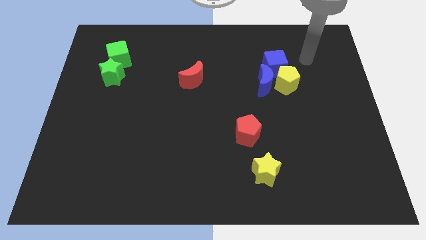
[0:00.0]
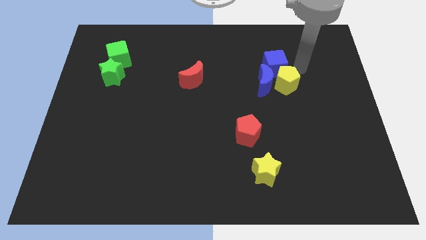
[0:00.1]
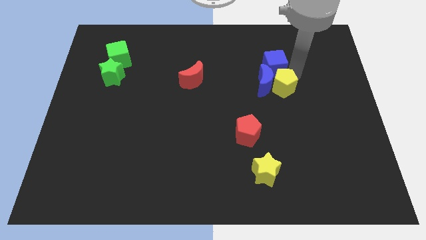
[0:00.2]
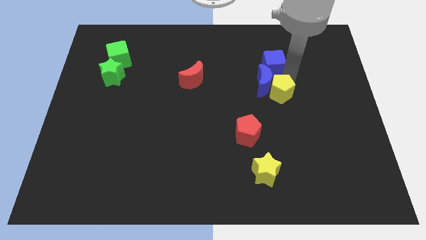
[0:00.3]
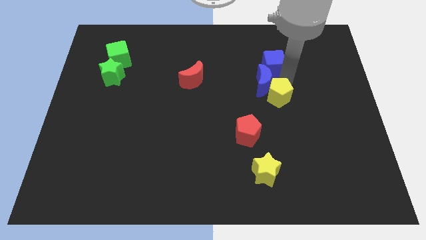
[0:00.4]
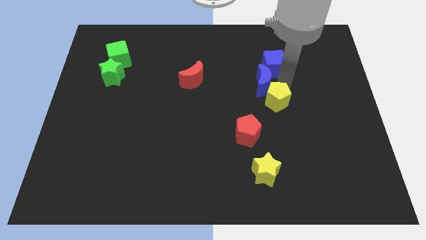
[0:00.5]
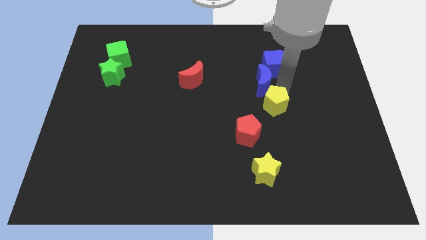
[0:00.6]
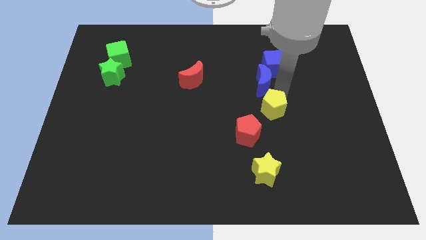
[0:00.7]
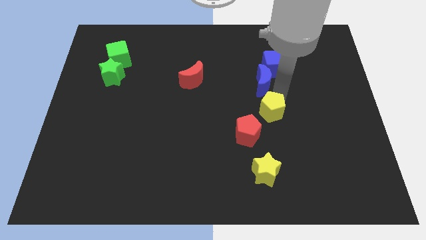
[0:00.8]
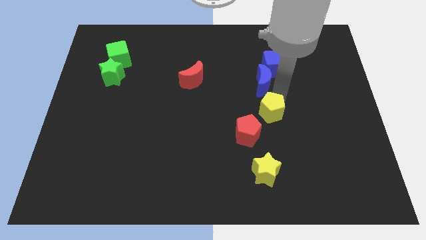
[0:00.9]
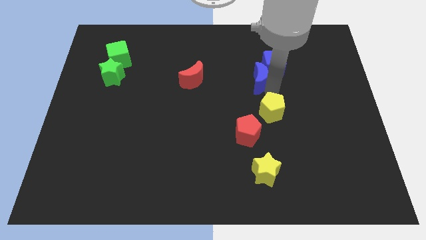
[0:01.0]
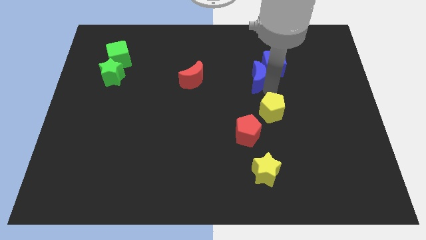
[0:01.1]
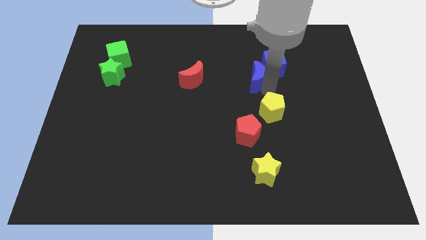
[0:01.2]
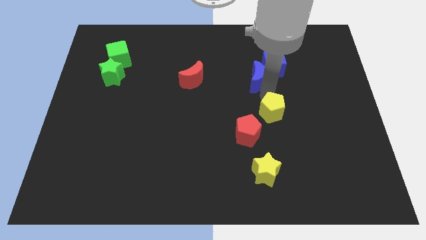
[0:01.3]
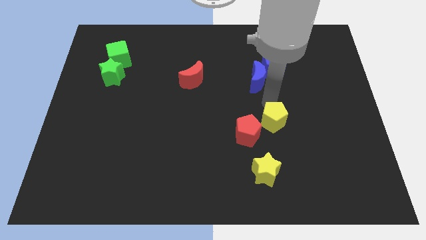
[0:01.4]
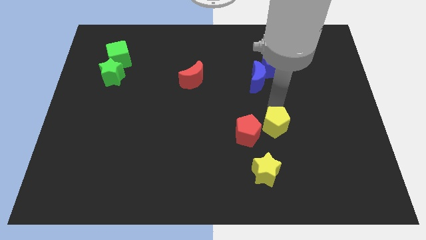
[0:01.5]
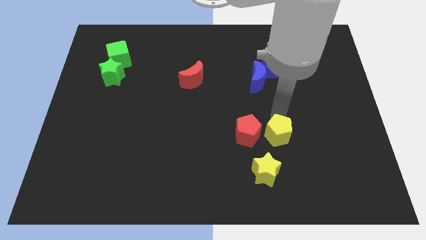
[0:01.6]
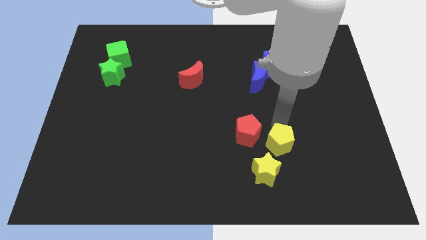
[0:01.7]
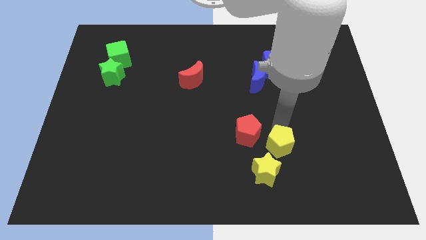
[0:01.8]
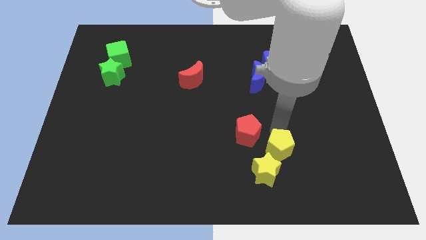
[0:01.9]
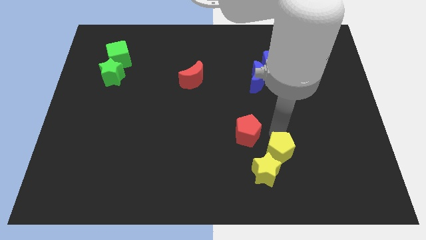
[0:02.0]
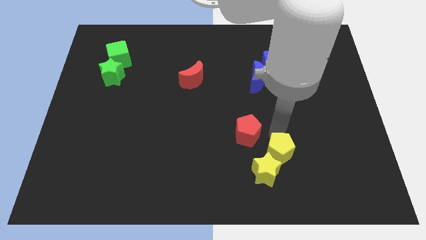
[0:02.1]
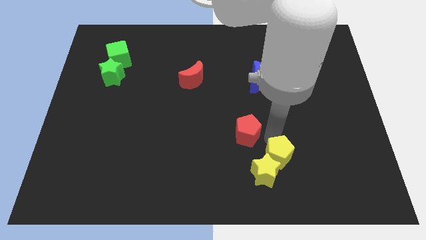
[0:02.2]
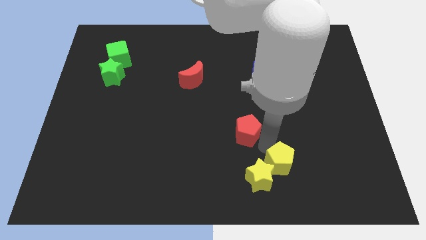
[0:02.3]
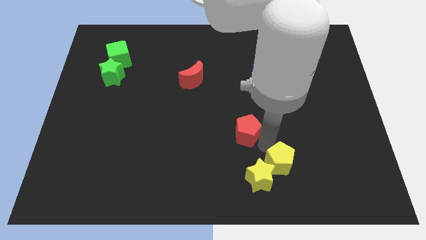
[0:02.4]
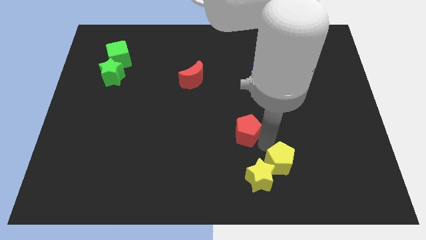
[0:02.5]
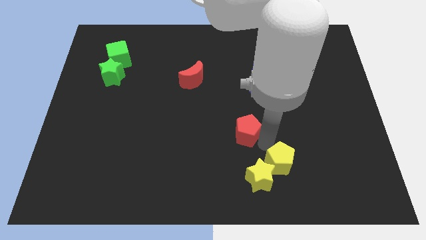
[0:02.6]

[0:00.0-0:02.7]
push the yellow pentagon into the yellow star

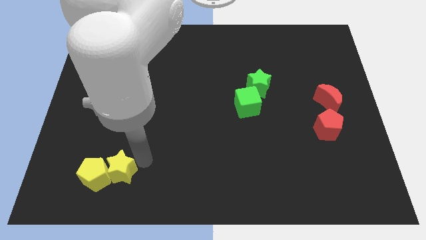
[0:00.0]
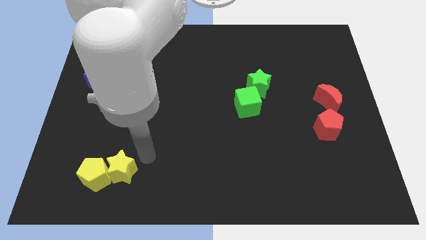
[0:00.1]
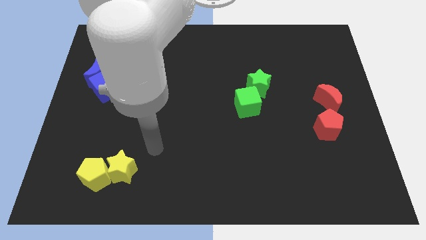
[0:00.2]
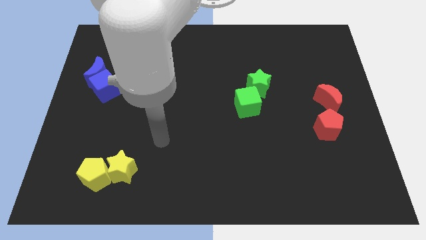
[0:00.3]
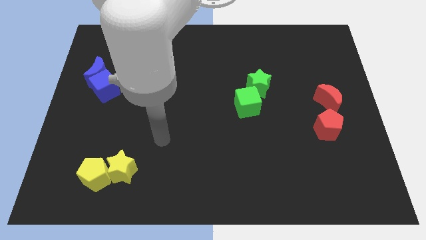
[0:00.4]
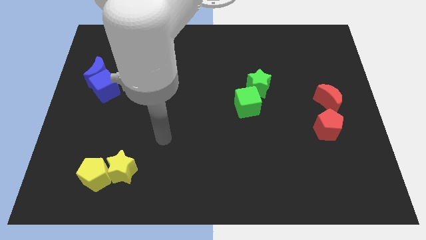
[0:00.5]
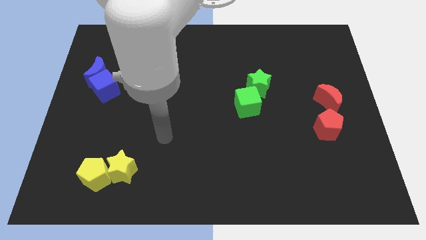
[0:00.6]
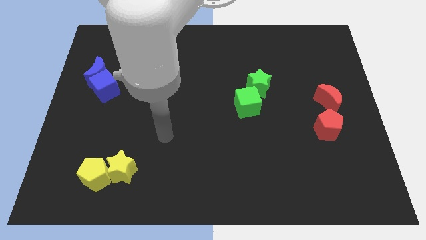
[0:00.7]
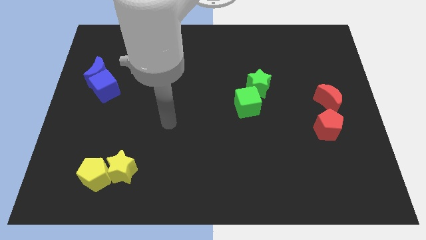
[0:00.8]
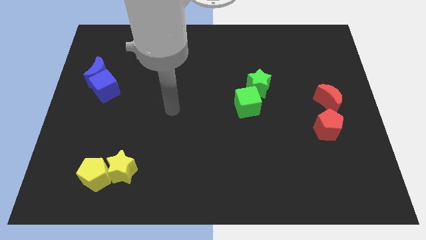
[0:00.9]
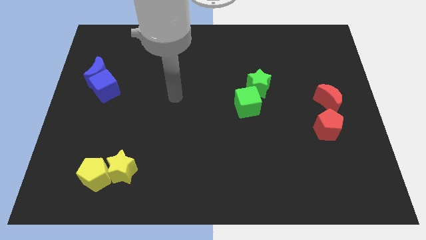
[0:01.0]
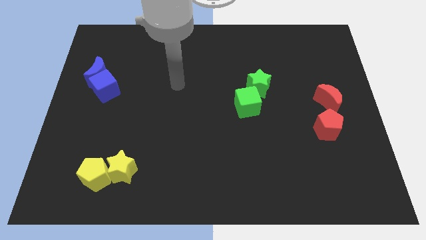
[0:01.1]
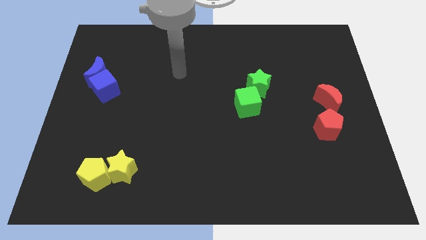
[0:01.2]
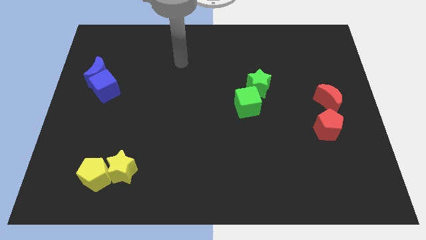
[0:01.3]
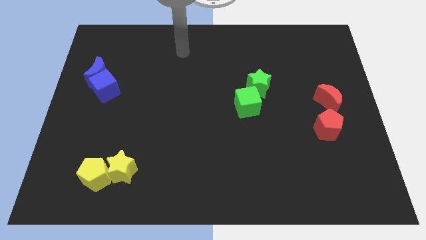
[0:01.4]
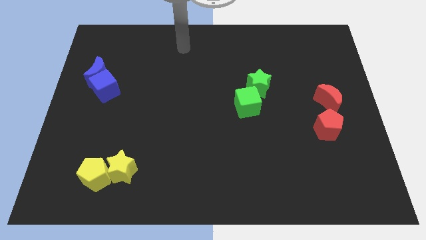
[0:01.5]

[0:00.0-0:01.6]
move your arm towards the top center of the board

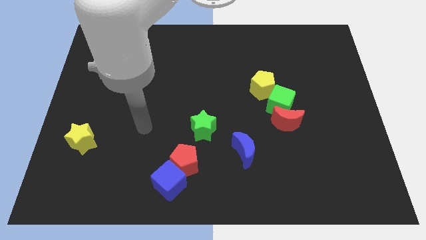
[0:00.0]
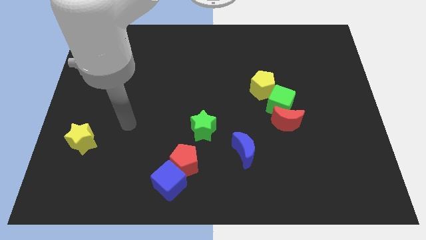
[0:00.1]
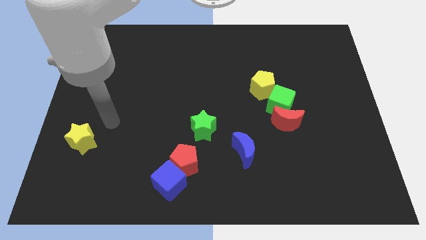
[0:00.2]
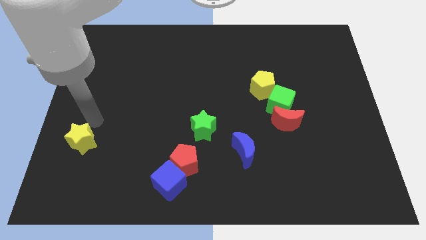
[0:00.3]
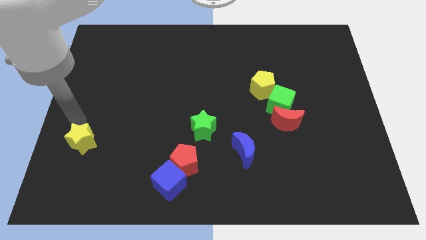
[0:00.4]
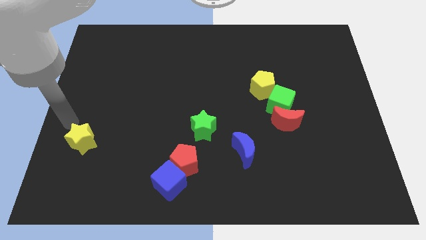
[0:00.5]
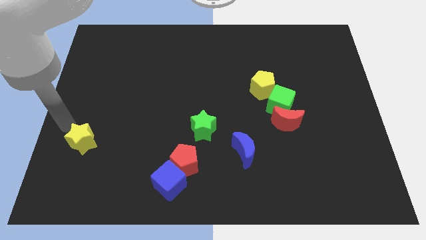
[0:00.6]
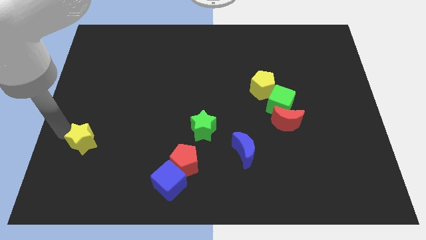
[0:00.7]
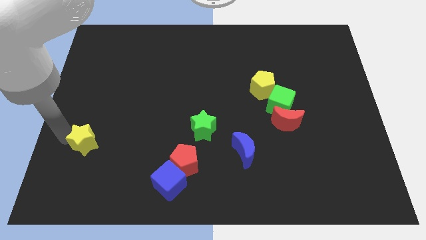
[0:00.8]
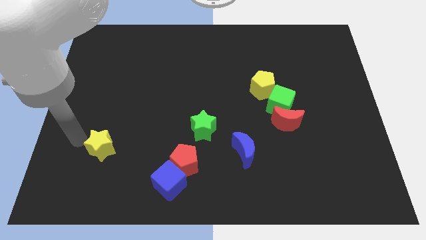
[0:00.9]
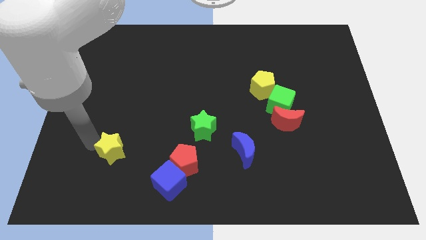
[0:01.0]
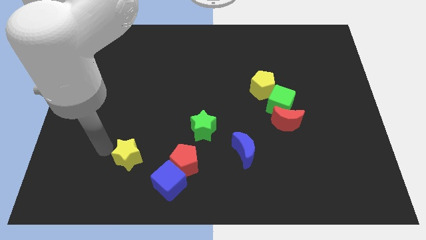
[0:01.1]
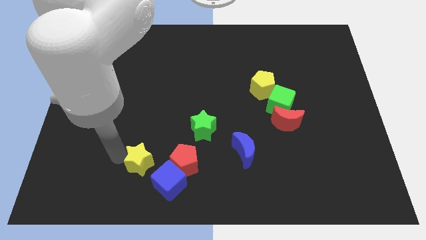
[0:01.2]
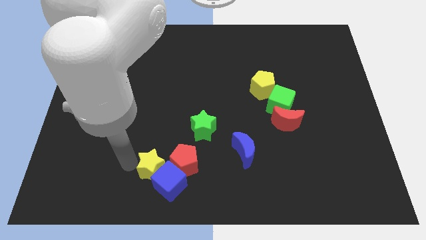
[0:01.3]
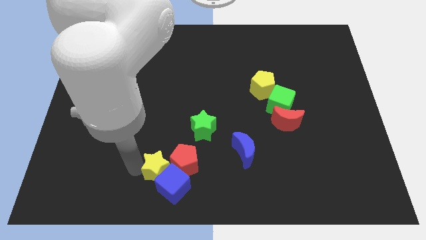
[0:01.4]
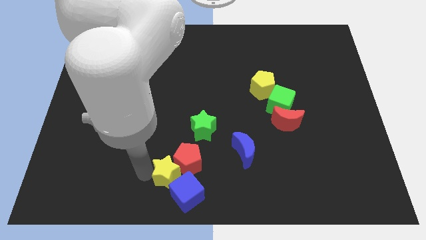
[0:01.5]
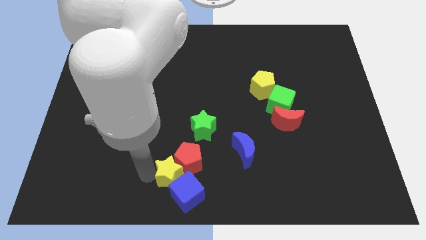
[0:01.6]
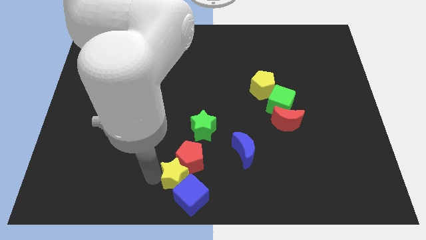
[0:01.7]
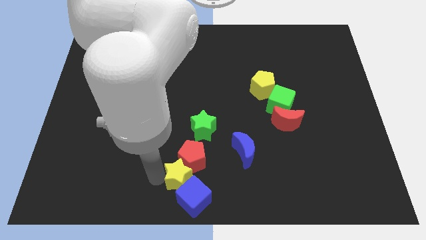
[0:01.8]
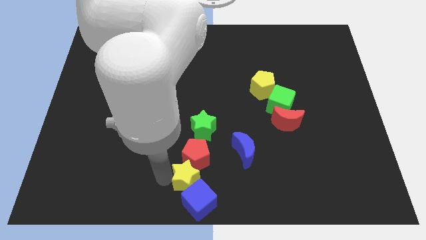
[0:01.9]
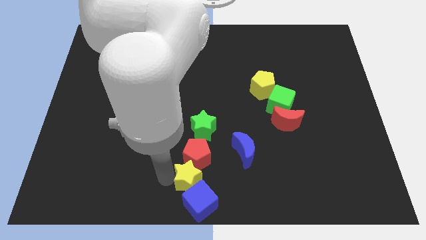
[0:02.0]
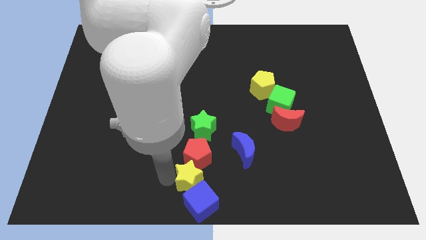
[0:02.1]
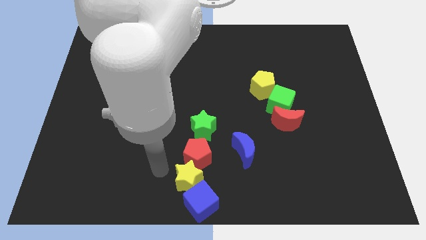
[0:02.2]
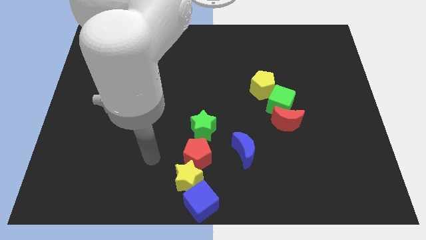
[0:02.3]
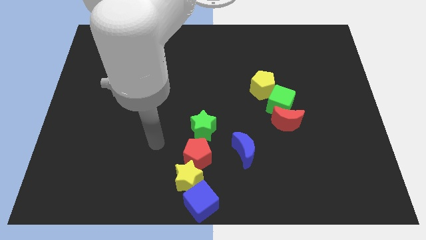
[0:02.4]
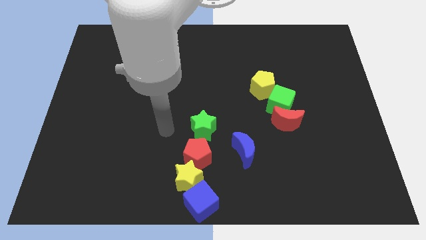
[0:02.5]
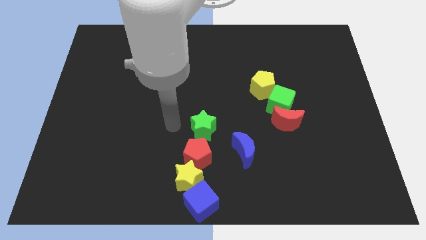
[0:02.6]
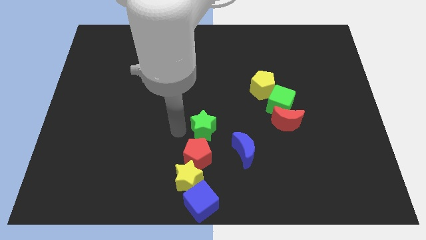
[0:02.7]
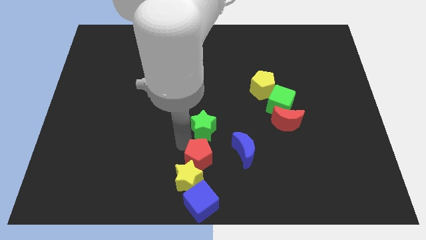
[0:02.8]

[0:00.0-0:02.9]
push the yellow star in between the red pentagon and blue cube

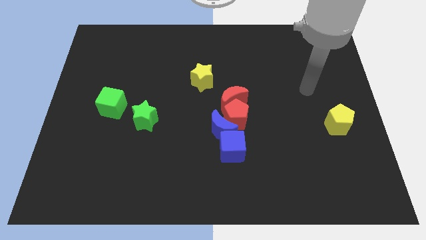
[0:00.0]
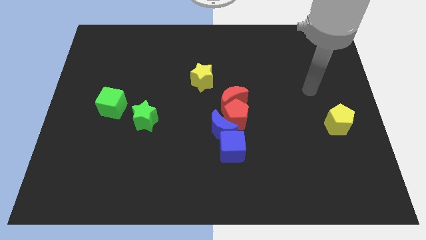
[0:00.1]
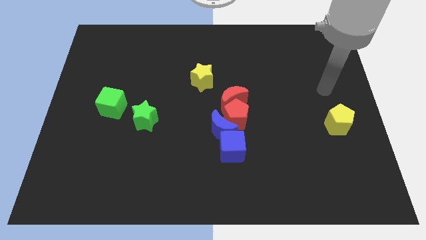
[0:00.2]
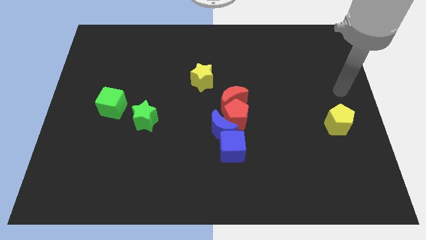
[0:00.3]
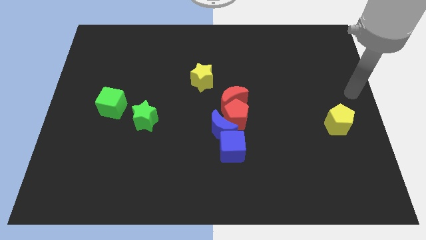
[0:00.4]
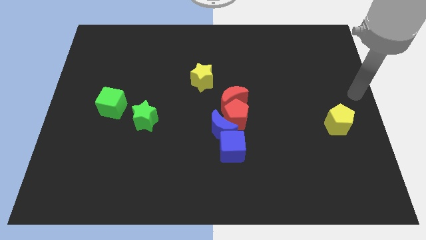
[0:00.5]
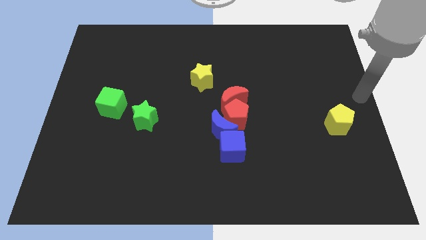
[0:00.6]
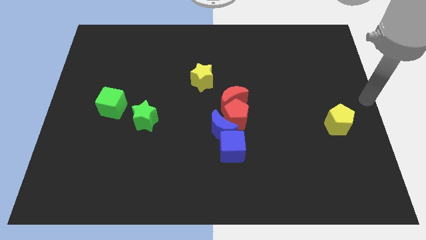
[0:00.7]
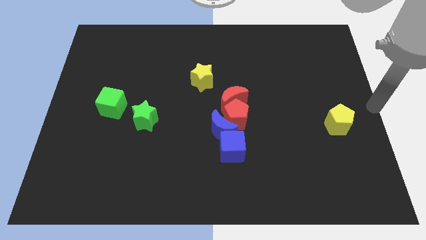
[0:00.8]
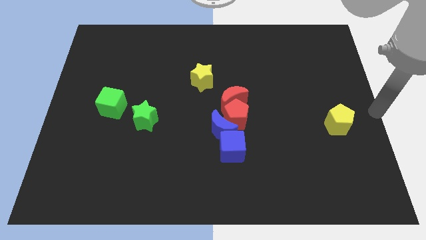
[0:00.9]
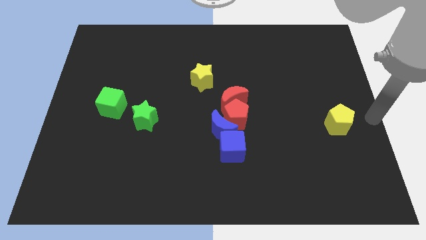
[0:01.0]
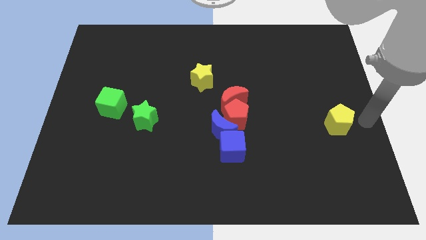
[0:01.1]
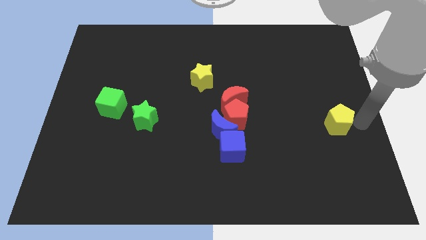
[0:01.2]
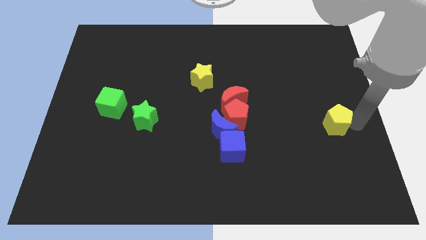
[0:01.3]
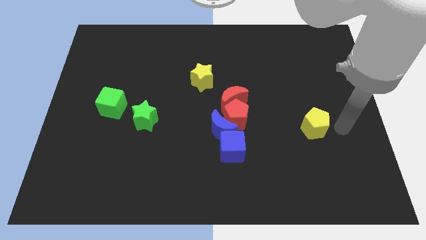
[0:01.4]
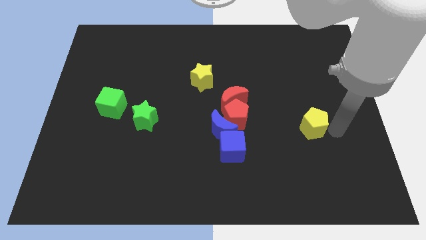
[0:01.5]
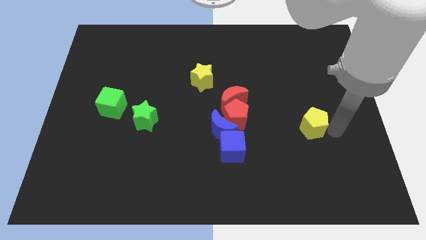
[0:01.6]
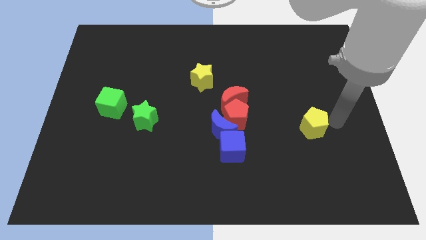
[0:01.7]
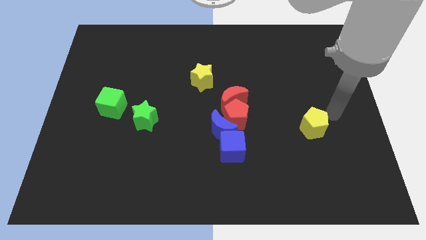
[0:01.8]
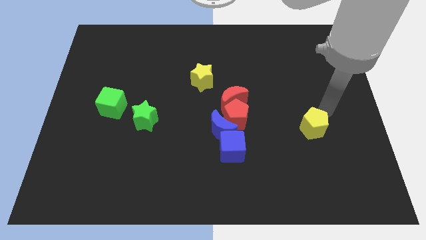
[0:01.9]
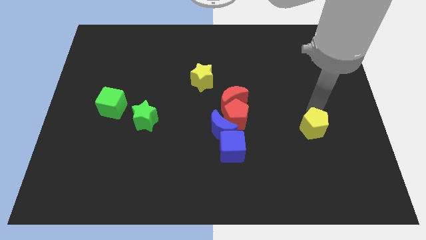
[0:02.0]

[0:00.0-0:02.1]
slide yellow pentagon slightly to the left
